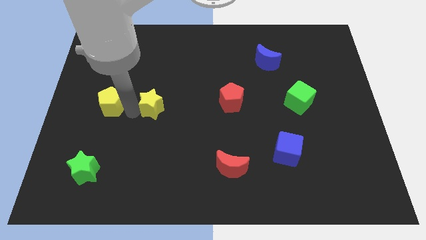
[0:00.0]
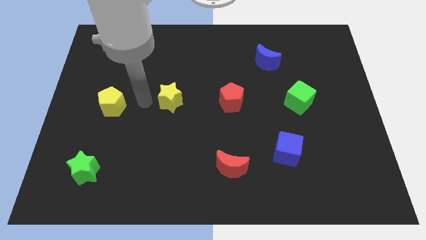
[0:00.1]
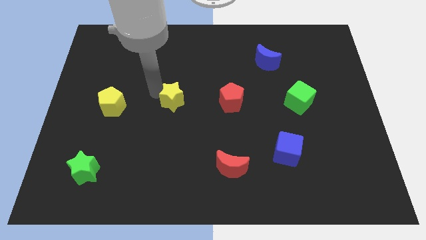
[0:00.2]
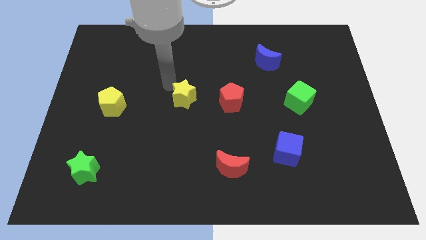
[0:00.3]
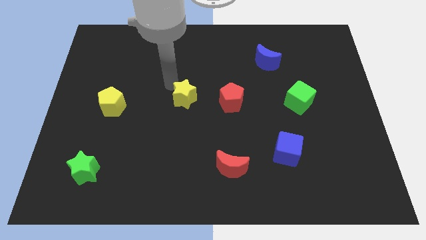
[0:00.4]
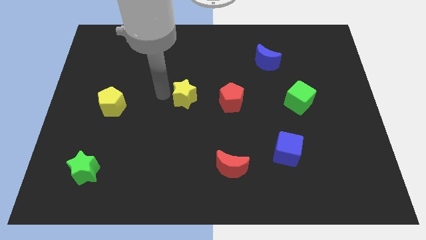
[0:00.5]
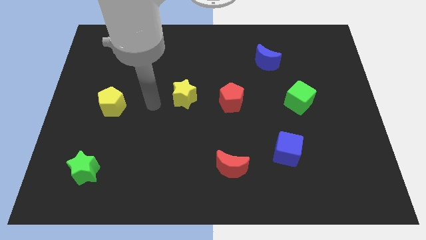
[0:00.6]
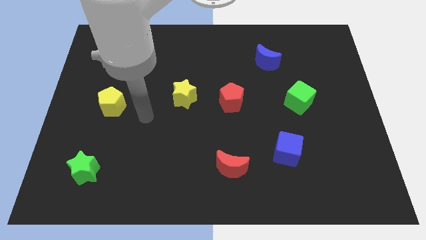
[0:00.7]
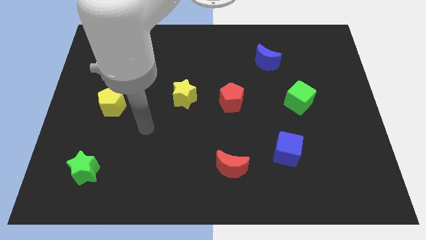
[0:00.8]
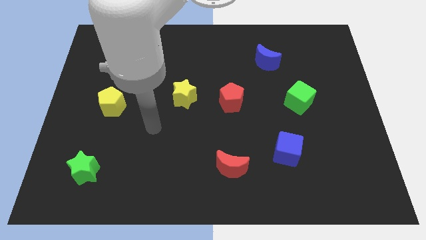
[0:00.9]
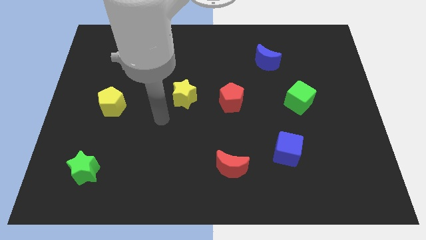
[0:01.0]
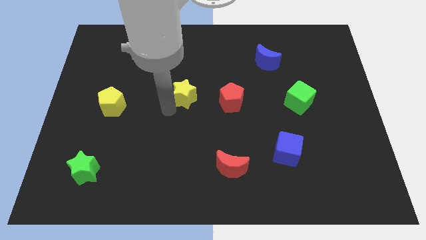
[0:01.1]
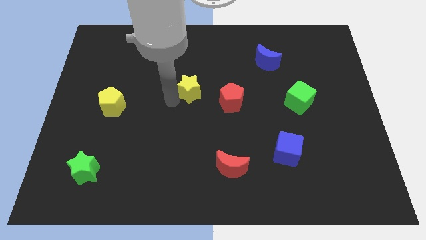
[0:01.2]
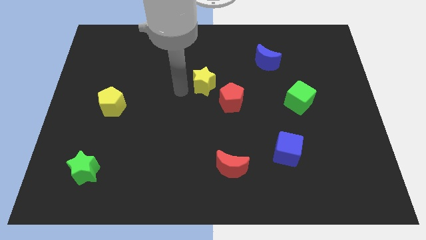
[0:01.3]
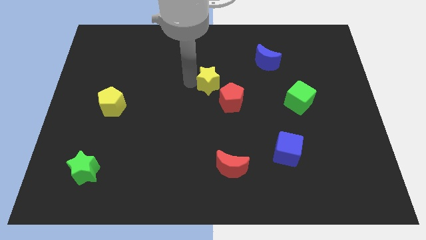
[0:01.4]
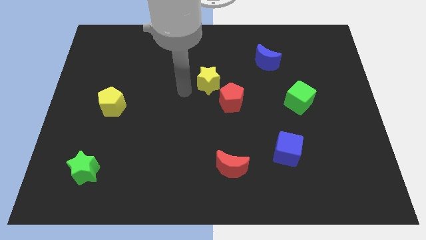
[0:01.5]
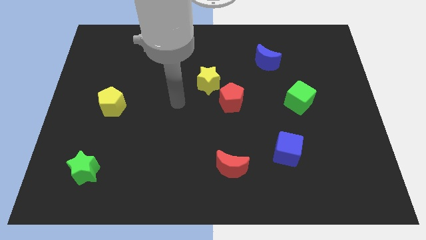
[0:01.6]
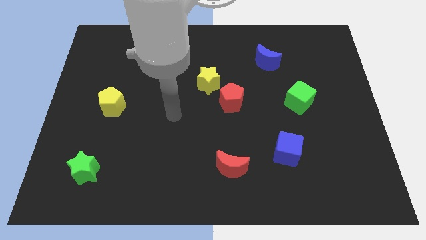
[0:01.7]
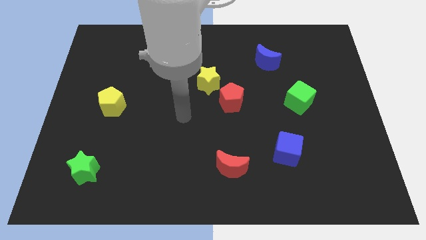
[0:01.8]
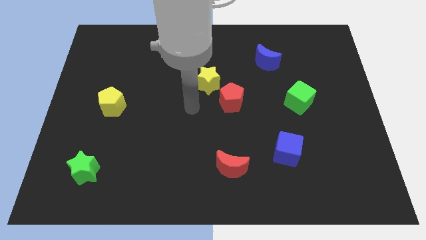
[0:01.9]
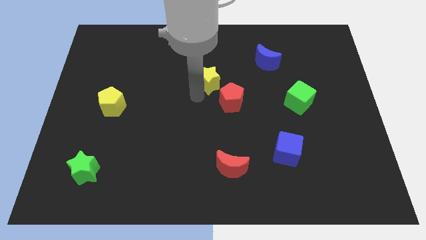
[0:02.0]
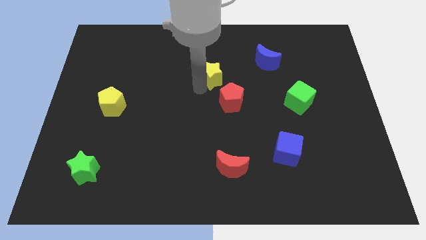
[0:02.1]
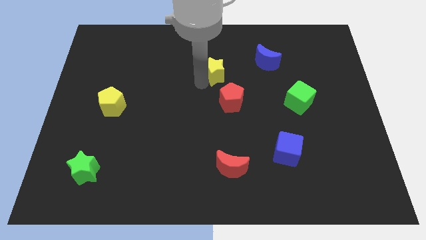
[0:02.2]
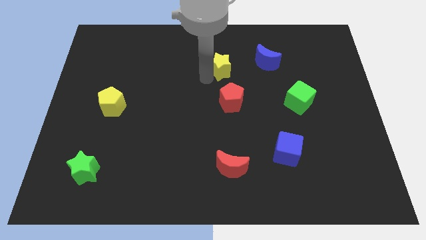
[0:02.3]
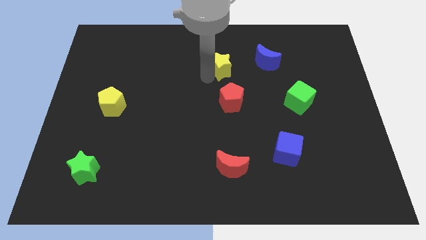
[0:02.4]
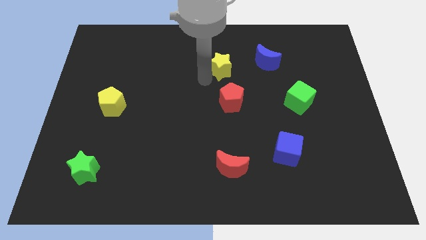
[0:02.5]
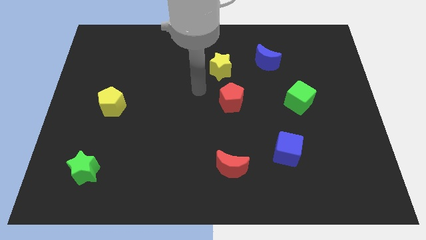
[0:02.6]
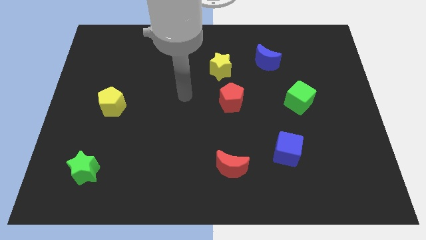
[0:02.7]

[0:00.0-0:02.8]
place the yellow star on top of red pentagon

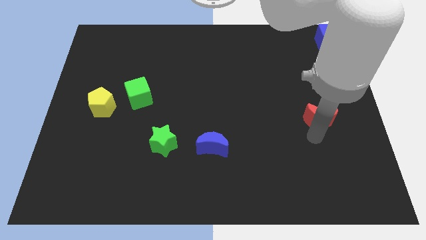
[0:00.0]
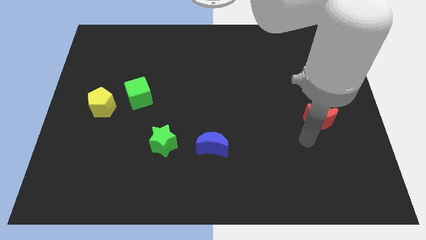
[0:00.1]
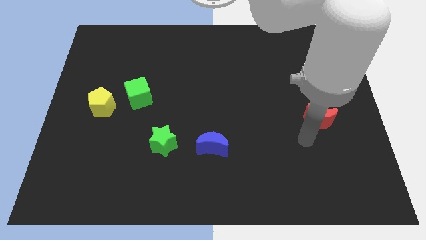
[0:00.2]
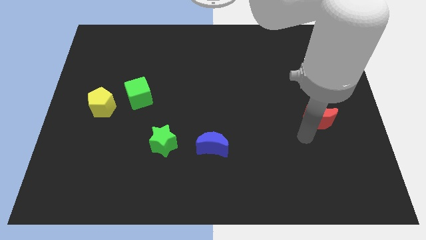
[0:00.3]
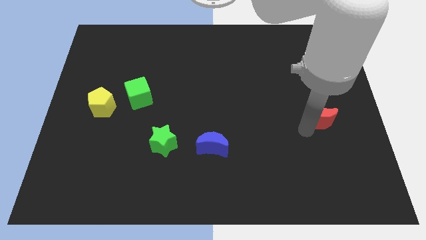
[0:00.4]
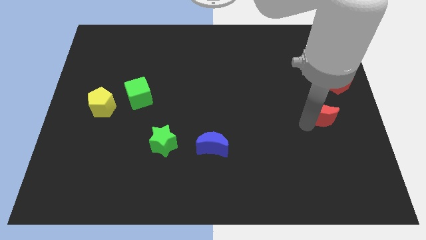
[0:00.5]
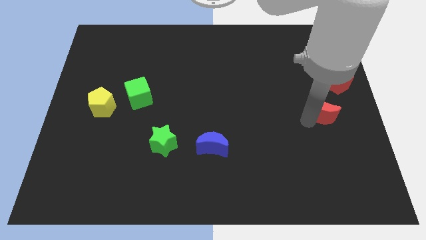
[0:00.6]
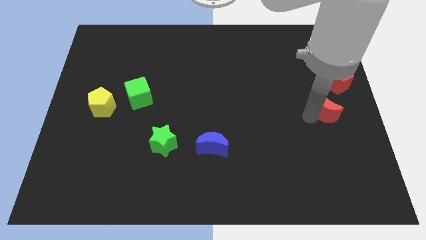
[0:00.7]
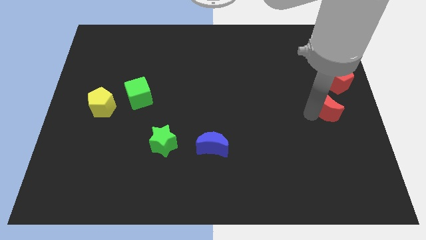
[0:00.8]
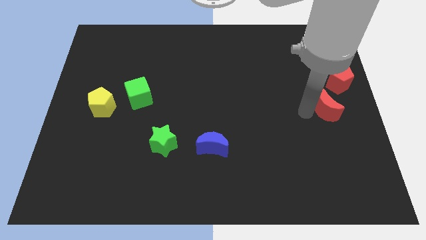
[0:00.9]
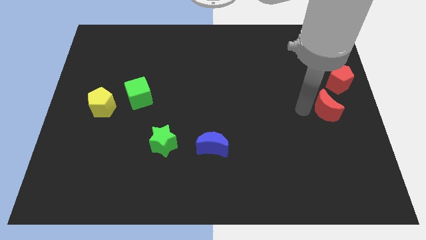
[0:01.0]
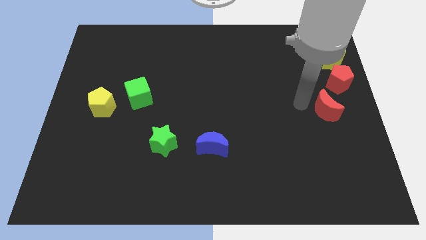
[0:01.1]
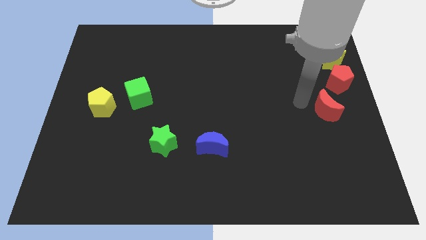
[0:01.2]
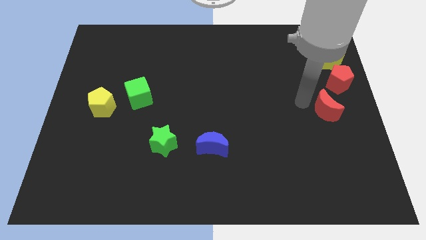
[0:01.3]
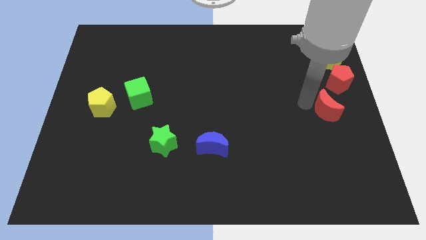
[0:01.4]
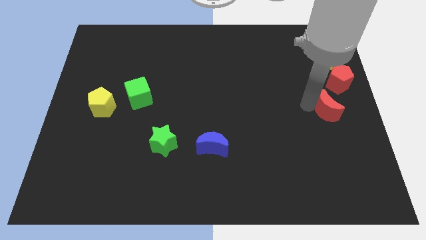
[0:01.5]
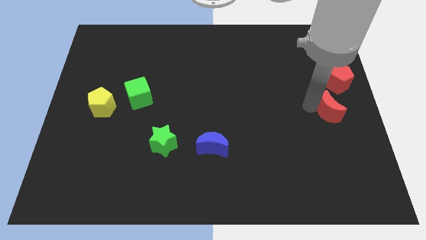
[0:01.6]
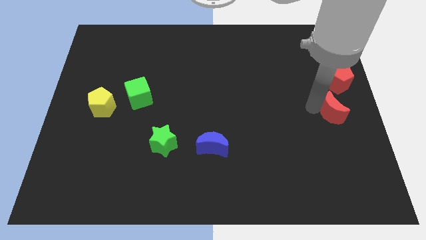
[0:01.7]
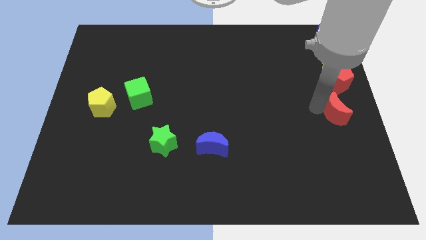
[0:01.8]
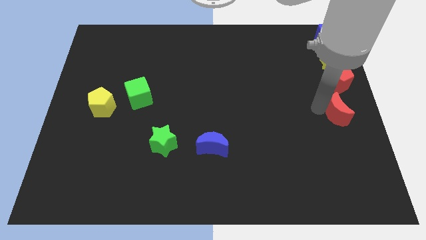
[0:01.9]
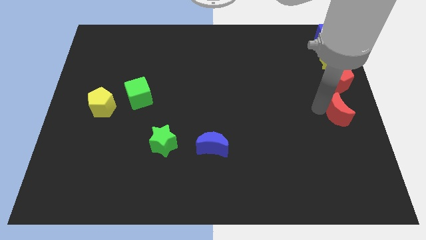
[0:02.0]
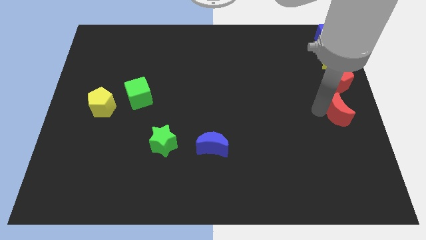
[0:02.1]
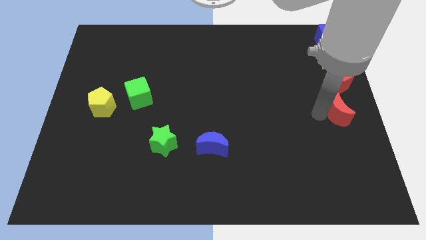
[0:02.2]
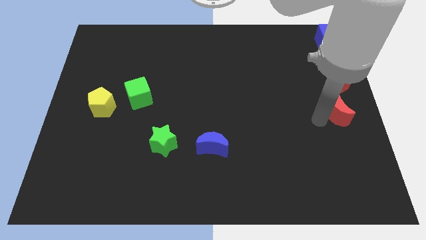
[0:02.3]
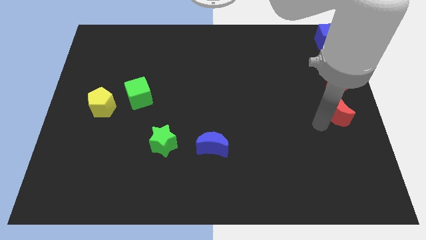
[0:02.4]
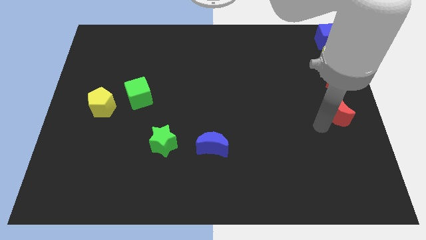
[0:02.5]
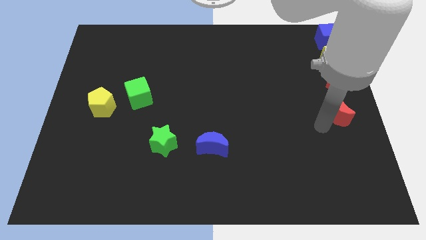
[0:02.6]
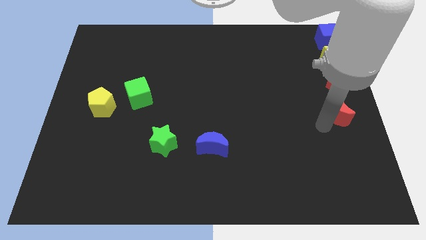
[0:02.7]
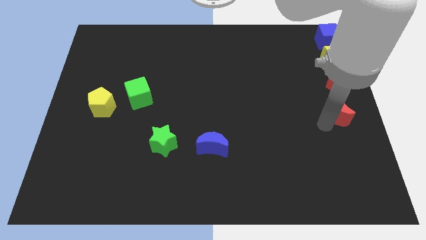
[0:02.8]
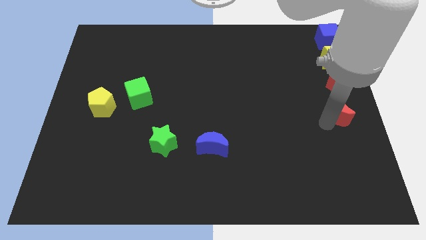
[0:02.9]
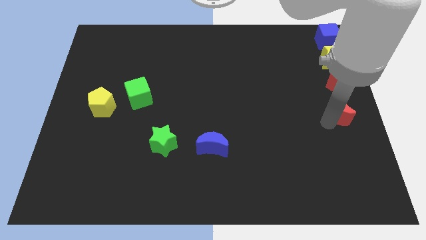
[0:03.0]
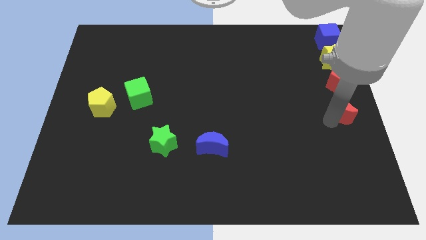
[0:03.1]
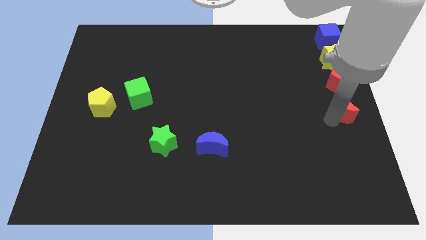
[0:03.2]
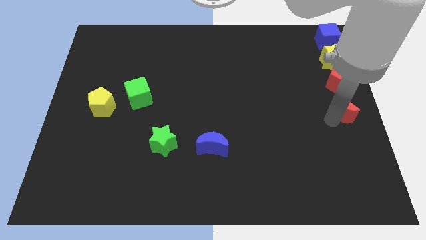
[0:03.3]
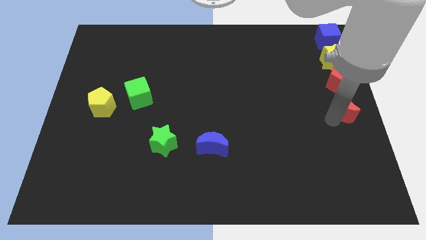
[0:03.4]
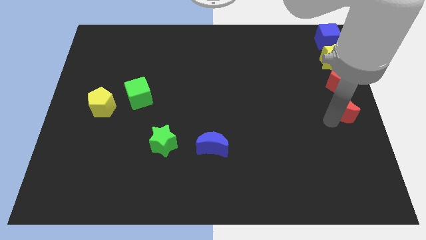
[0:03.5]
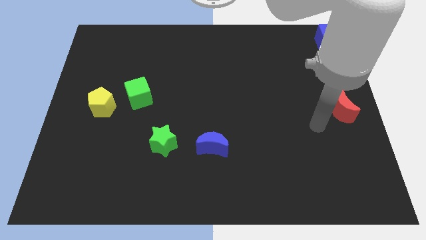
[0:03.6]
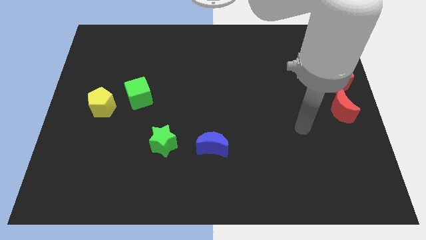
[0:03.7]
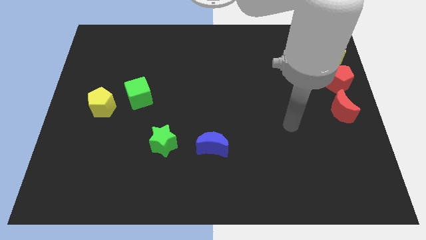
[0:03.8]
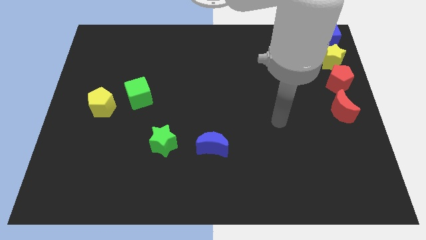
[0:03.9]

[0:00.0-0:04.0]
put the red moon vertically below the red pentagon

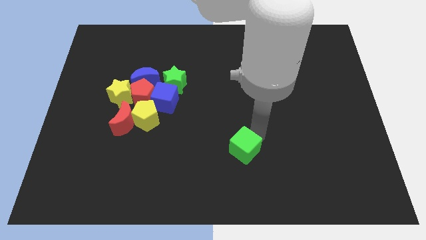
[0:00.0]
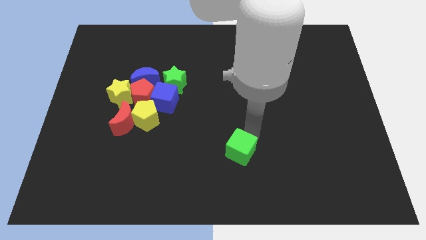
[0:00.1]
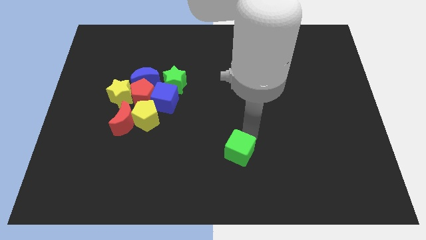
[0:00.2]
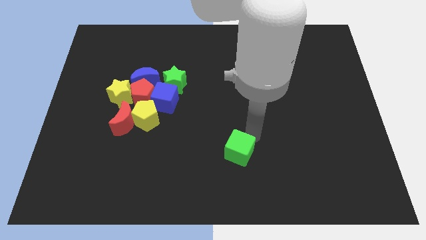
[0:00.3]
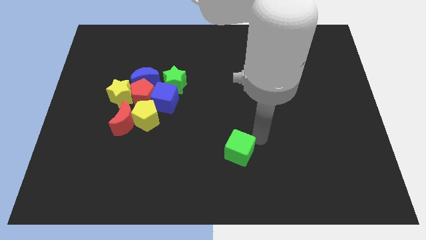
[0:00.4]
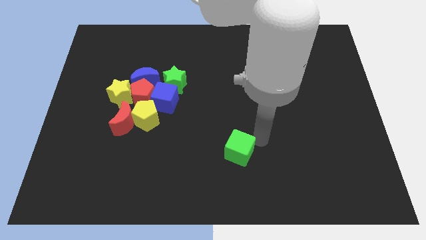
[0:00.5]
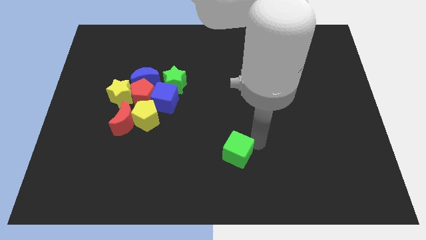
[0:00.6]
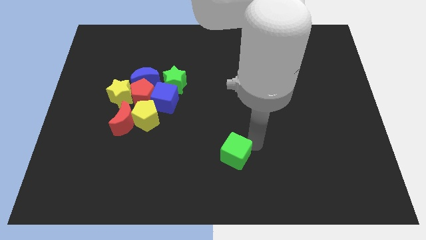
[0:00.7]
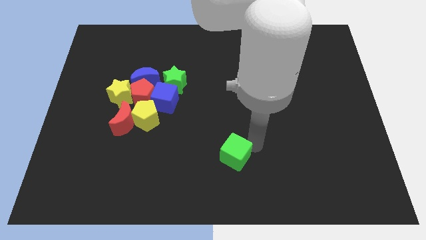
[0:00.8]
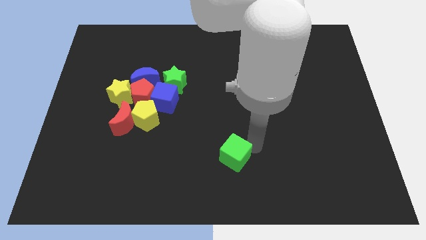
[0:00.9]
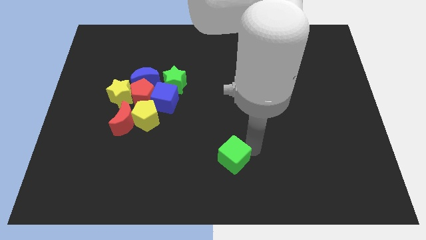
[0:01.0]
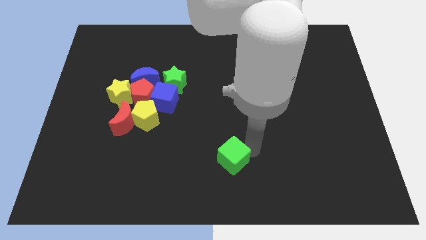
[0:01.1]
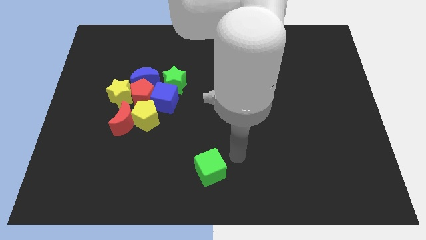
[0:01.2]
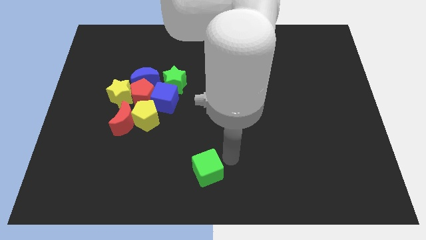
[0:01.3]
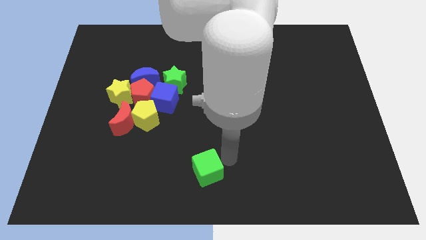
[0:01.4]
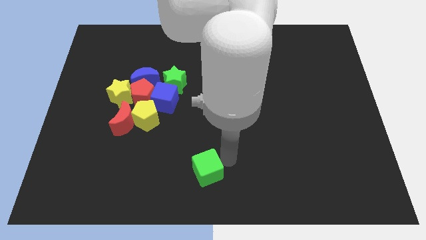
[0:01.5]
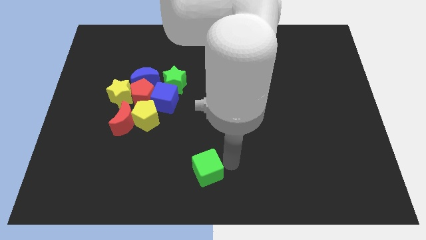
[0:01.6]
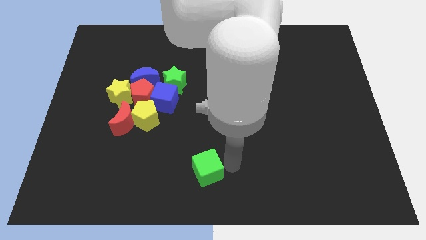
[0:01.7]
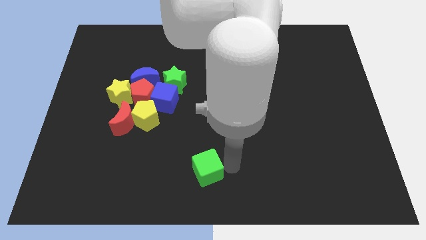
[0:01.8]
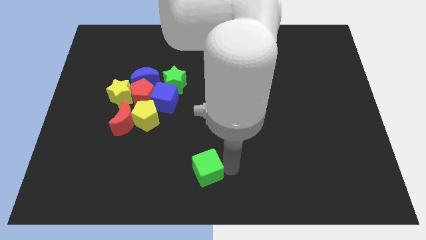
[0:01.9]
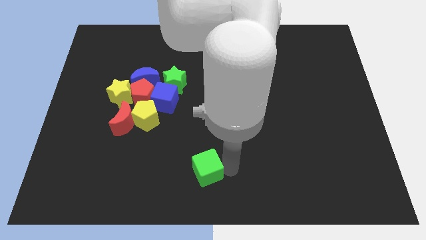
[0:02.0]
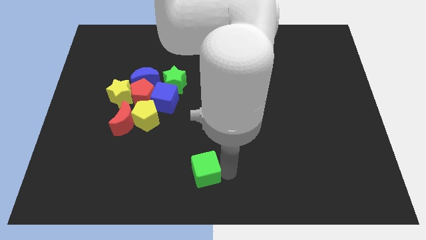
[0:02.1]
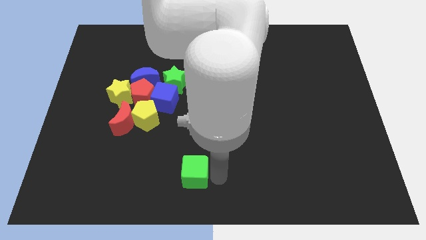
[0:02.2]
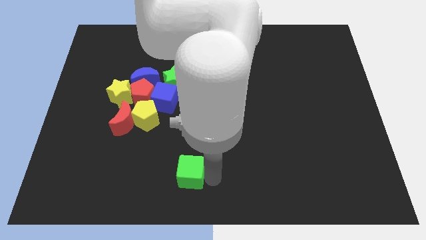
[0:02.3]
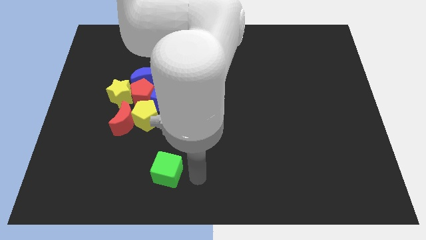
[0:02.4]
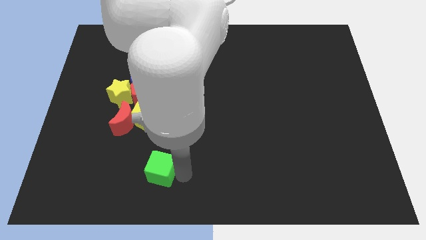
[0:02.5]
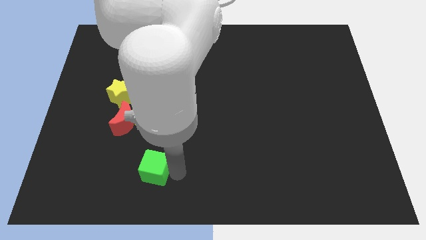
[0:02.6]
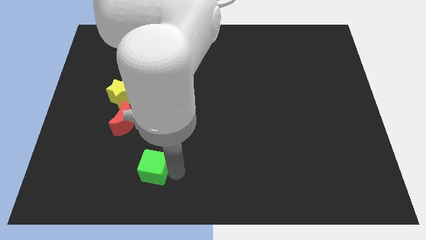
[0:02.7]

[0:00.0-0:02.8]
push green cube below yellow pentagon
